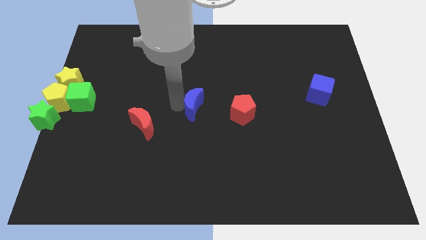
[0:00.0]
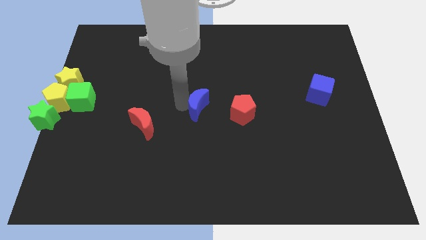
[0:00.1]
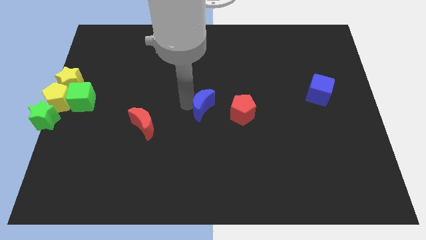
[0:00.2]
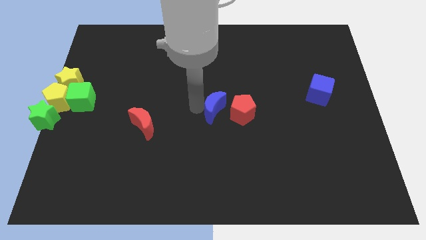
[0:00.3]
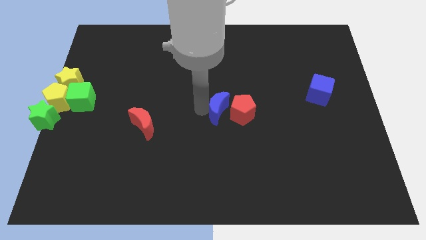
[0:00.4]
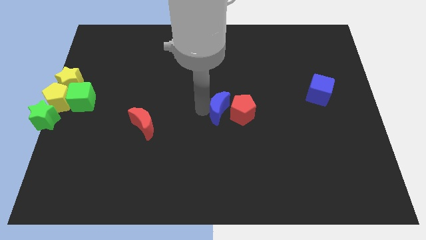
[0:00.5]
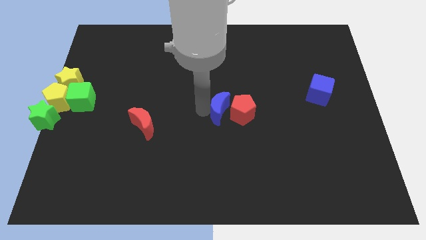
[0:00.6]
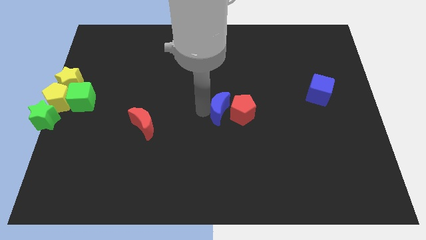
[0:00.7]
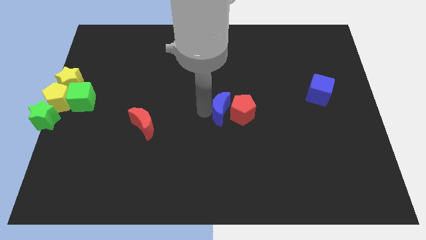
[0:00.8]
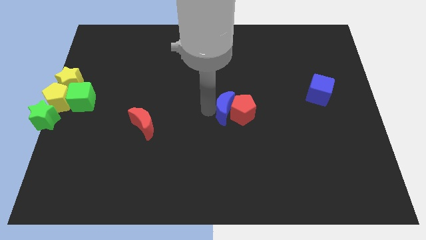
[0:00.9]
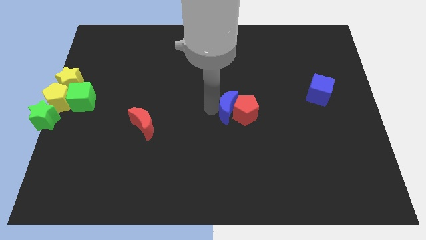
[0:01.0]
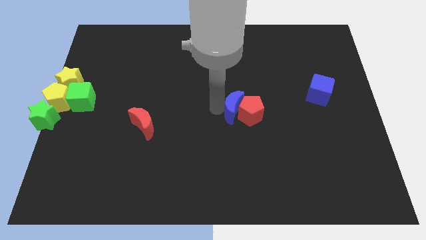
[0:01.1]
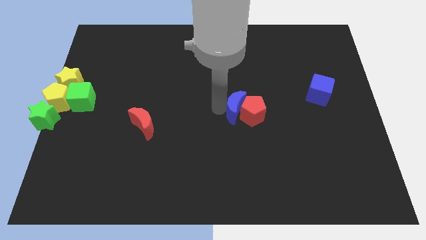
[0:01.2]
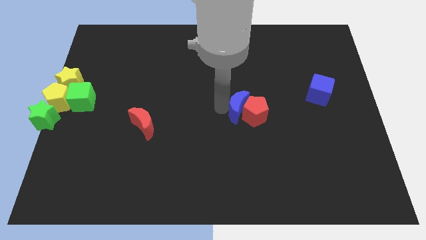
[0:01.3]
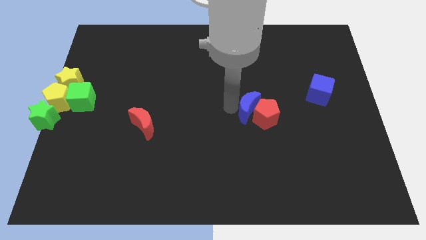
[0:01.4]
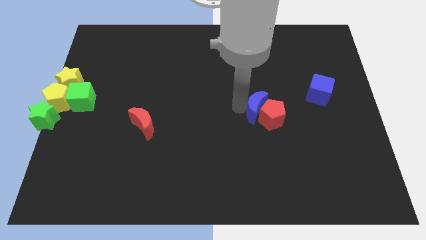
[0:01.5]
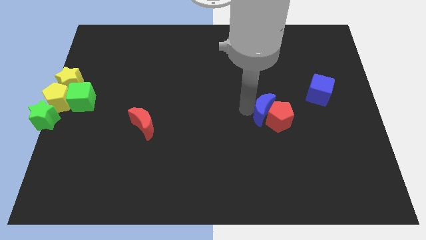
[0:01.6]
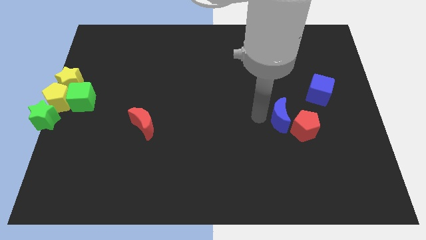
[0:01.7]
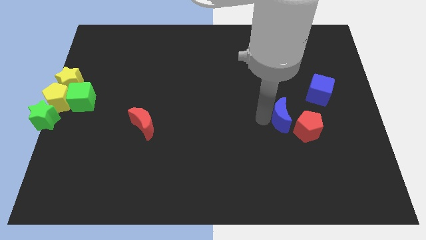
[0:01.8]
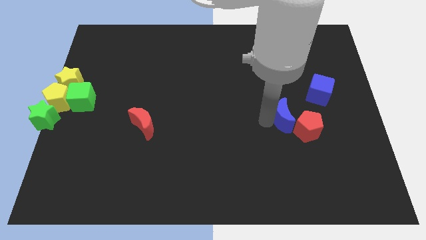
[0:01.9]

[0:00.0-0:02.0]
push the blue crescent into red pentagon

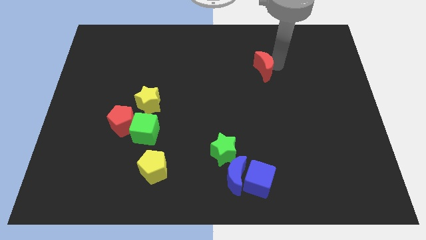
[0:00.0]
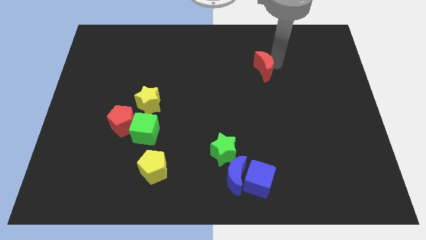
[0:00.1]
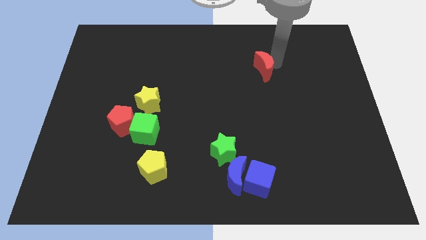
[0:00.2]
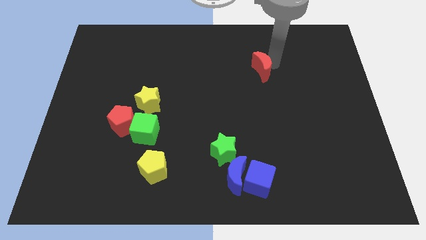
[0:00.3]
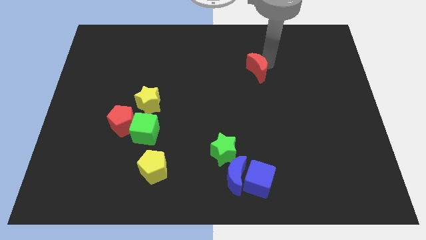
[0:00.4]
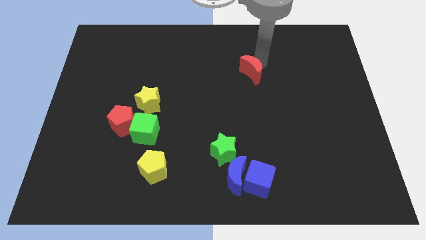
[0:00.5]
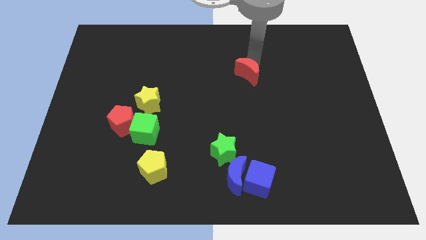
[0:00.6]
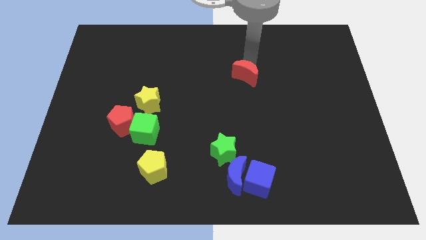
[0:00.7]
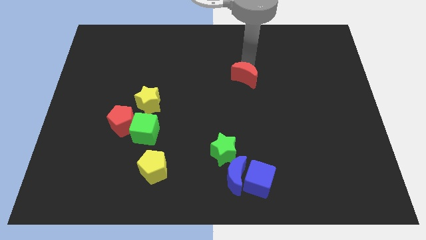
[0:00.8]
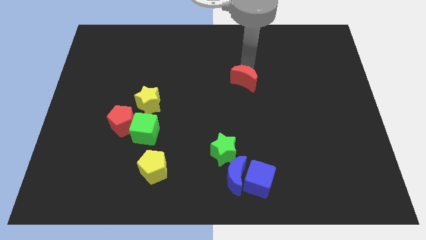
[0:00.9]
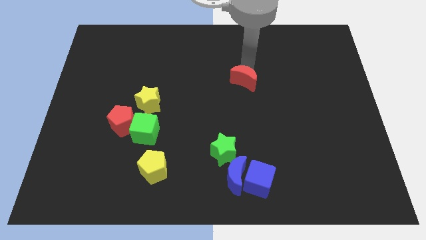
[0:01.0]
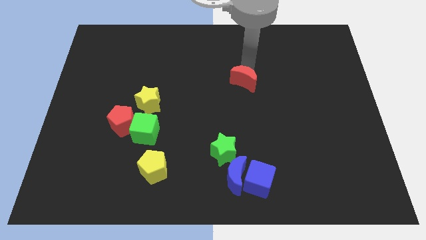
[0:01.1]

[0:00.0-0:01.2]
slide the red moon towards the center

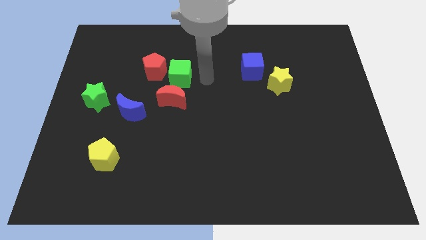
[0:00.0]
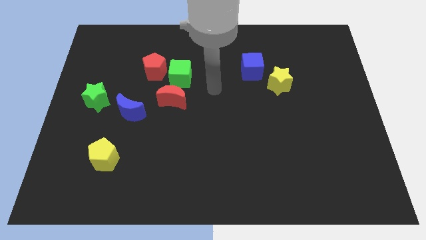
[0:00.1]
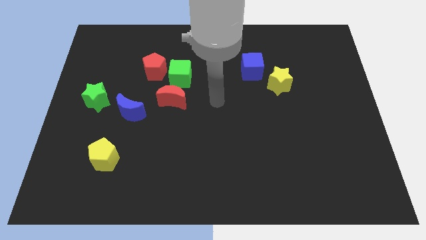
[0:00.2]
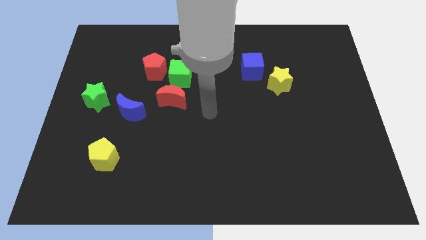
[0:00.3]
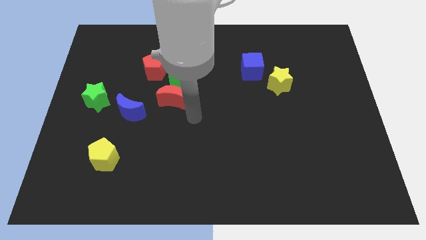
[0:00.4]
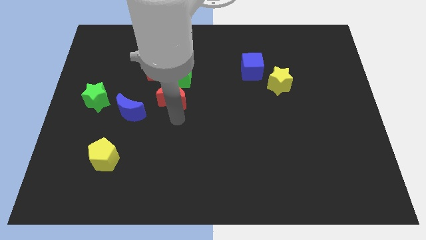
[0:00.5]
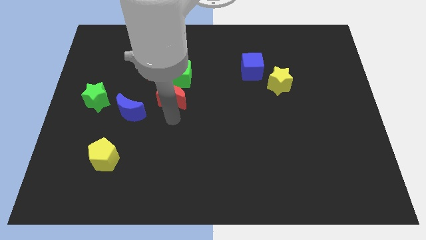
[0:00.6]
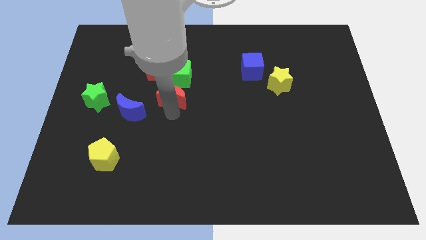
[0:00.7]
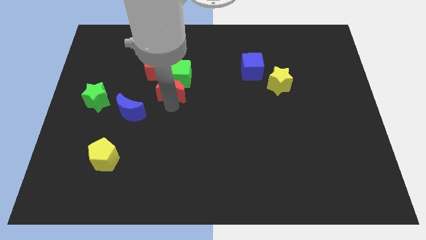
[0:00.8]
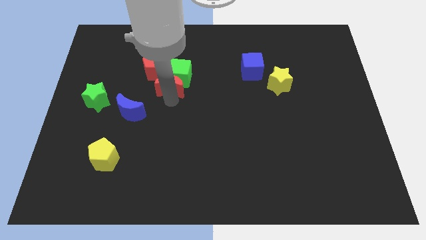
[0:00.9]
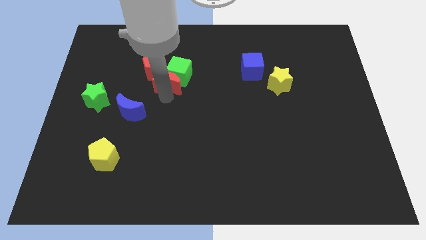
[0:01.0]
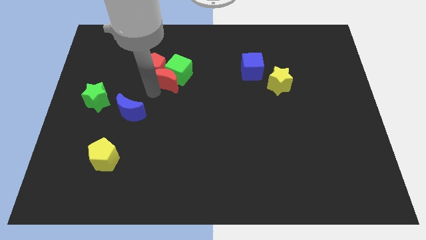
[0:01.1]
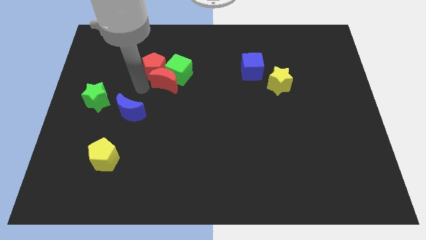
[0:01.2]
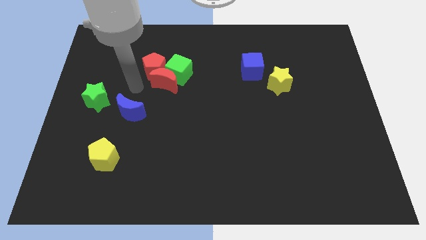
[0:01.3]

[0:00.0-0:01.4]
move the red moon into the green cube

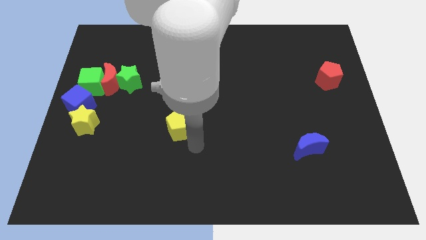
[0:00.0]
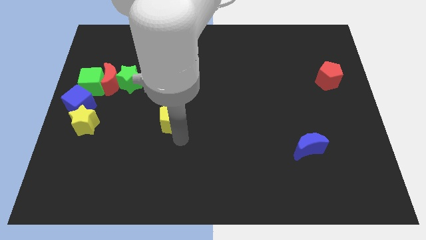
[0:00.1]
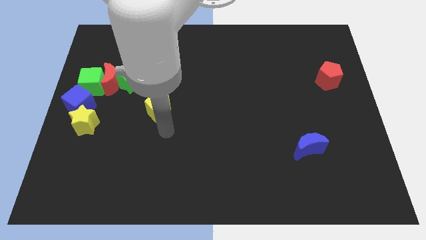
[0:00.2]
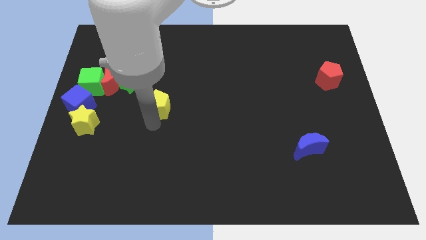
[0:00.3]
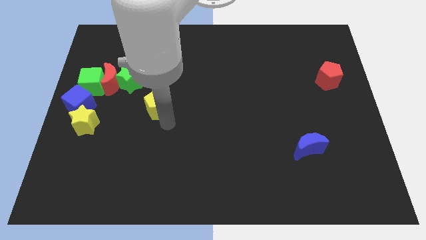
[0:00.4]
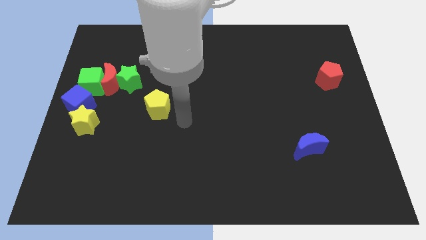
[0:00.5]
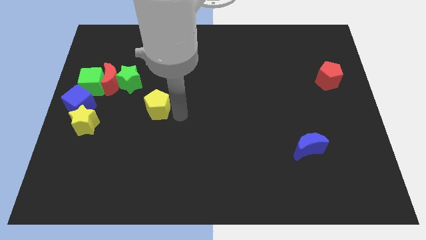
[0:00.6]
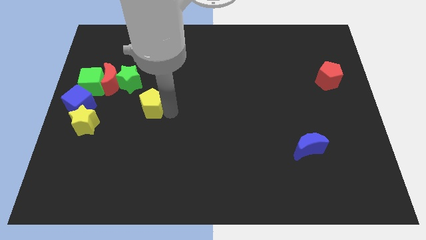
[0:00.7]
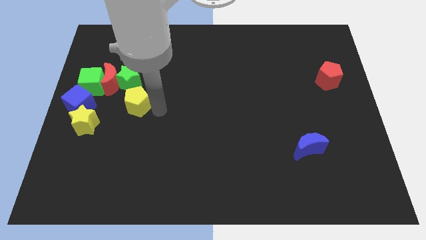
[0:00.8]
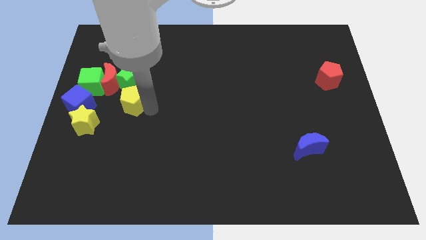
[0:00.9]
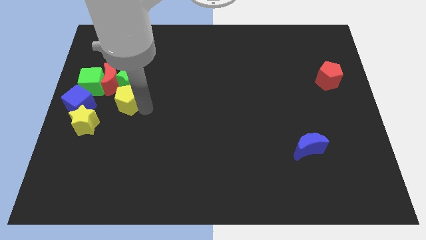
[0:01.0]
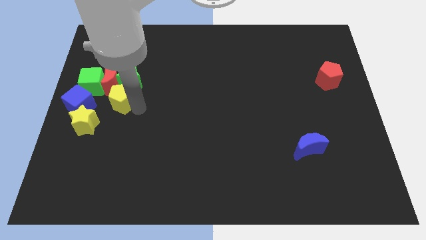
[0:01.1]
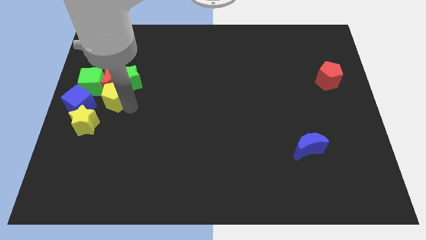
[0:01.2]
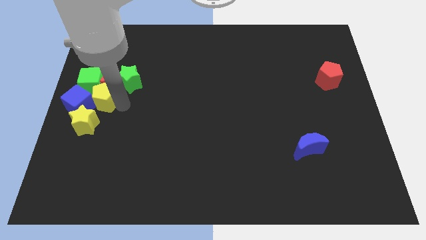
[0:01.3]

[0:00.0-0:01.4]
move the yellow pentagon down to the red moon

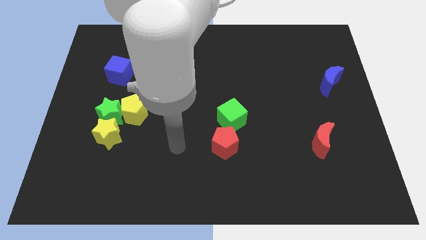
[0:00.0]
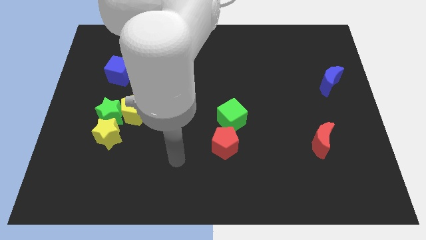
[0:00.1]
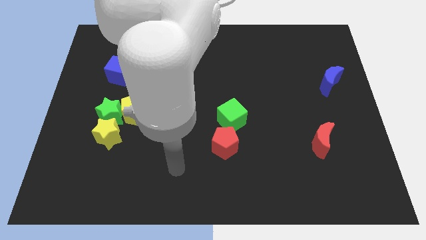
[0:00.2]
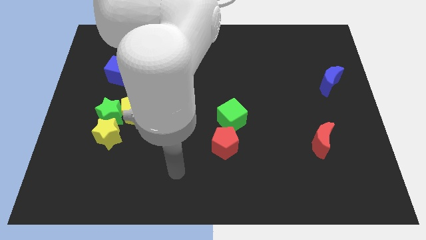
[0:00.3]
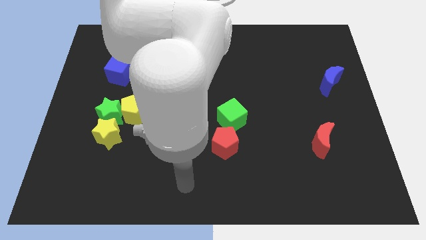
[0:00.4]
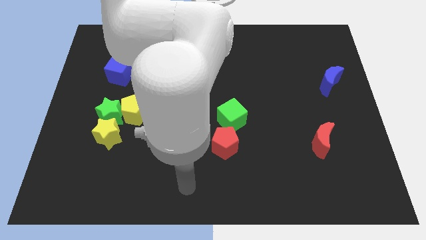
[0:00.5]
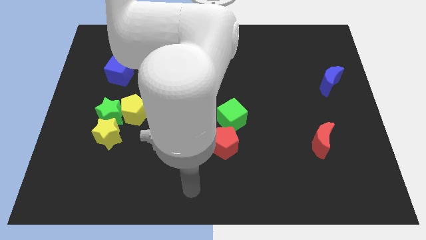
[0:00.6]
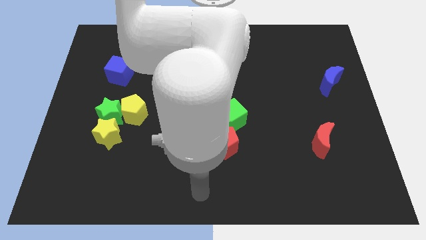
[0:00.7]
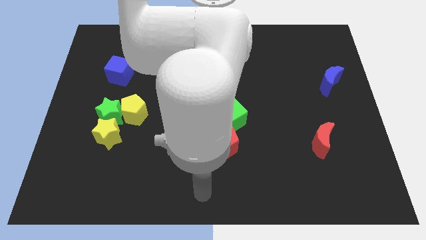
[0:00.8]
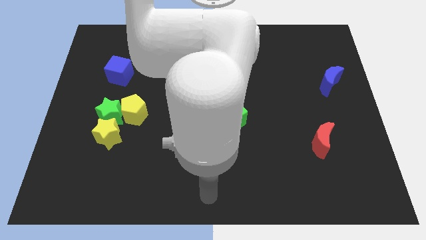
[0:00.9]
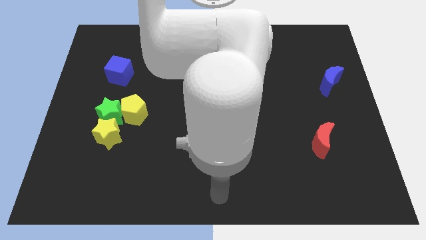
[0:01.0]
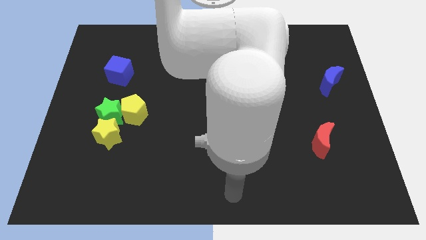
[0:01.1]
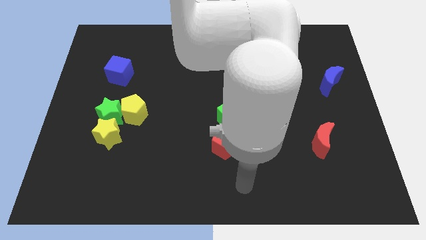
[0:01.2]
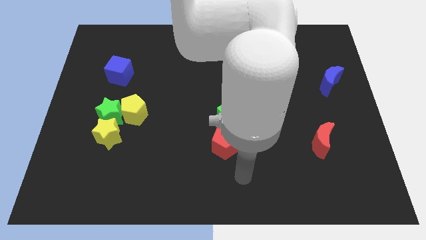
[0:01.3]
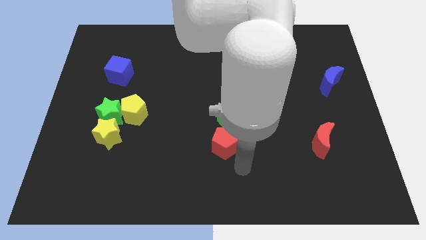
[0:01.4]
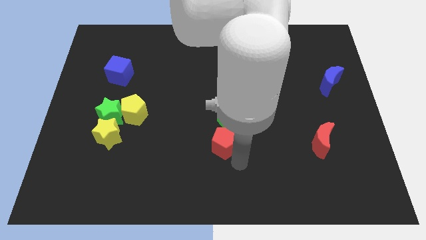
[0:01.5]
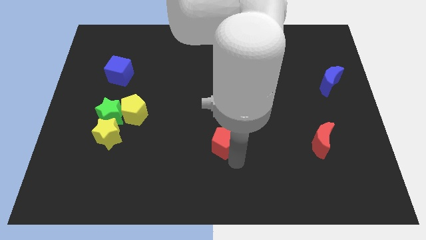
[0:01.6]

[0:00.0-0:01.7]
push the red pentagon to the top

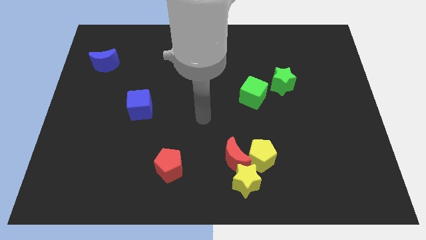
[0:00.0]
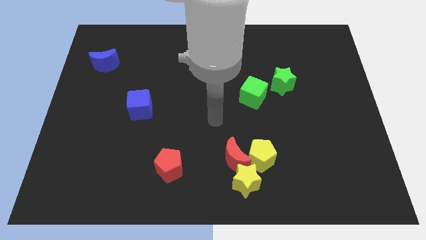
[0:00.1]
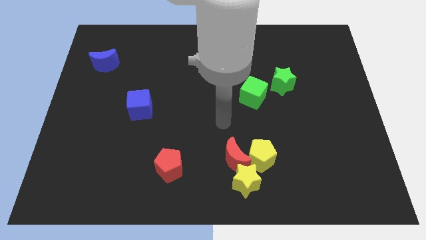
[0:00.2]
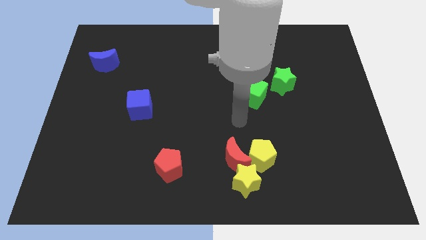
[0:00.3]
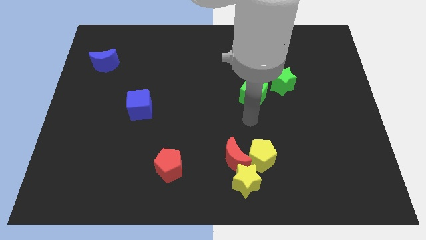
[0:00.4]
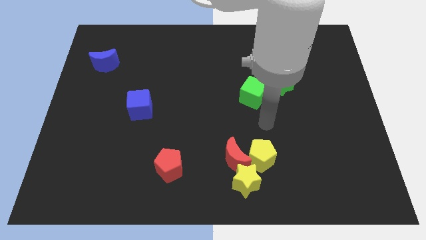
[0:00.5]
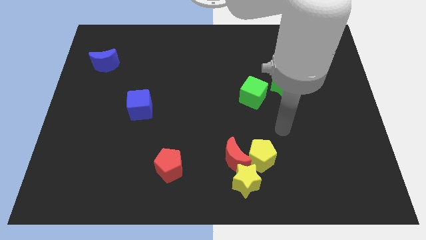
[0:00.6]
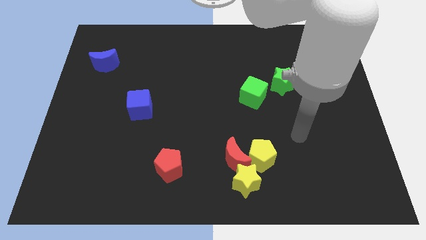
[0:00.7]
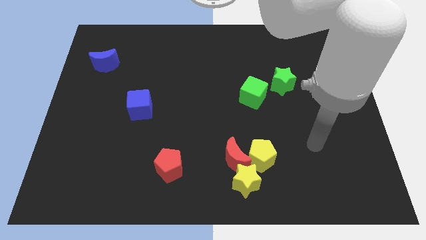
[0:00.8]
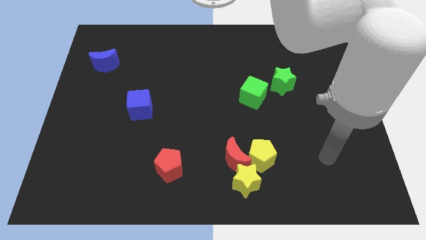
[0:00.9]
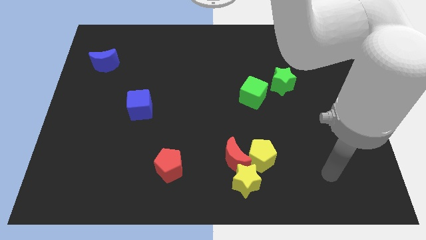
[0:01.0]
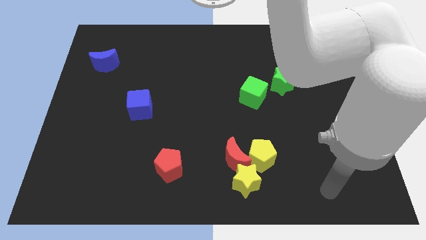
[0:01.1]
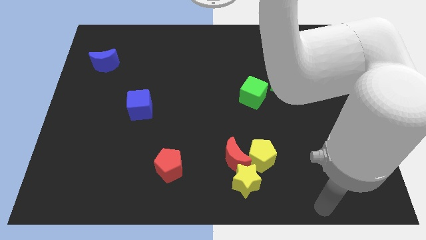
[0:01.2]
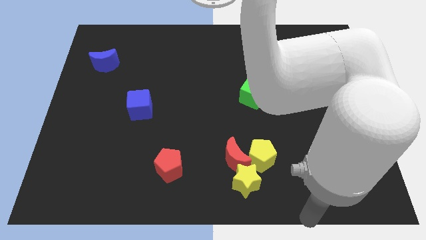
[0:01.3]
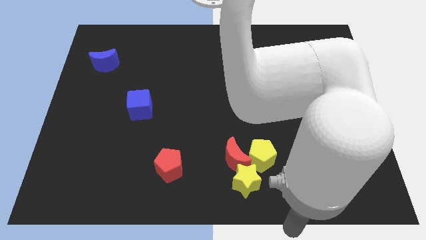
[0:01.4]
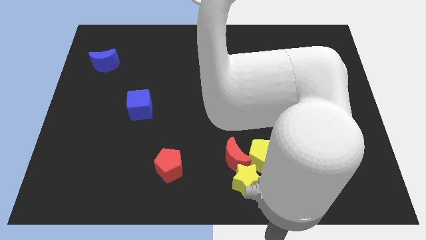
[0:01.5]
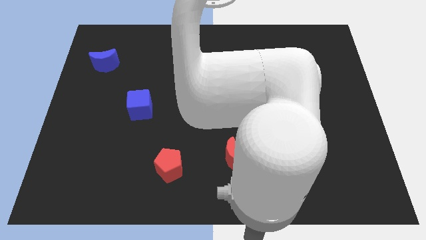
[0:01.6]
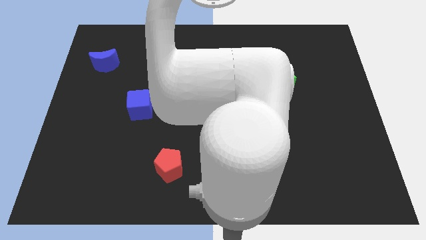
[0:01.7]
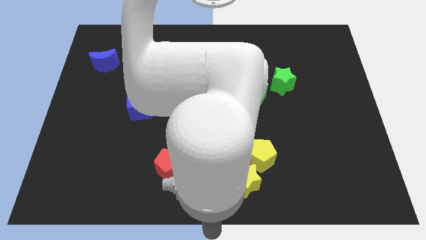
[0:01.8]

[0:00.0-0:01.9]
move your arm towards the bottom center of the board
